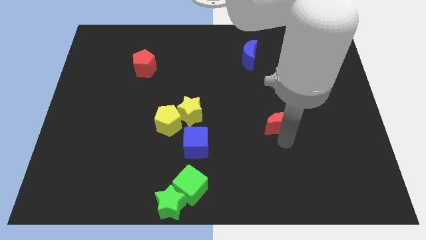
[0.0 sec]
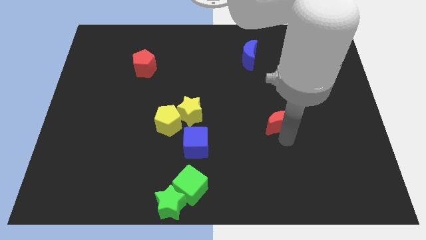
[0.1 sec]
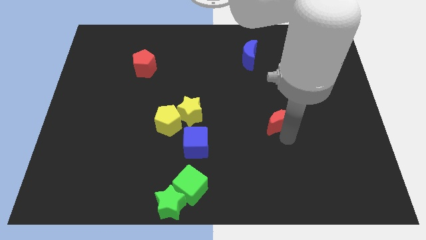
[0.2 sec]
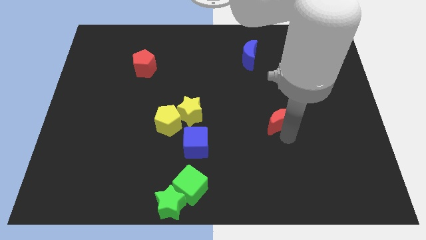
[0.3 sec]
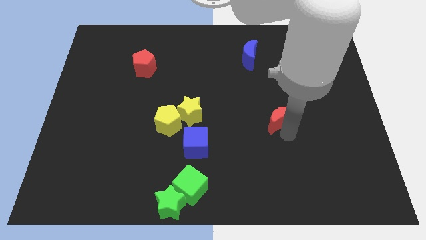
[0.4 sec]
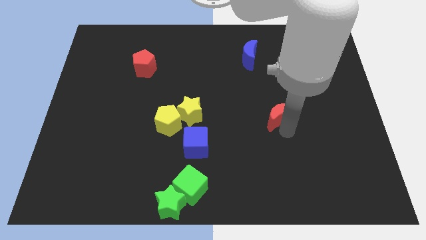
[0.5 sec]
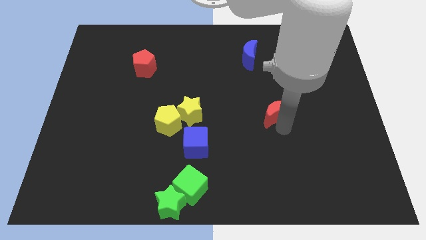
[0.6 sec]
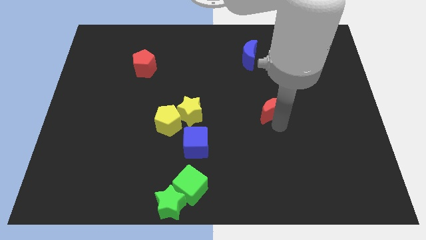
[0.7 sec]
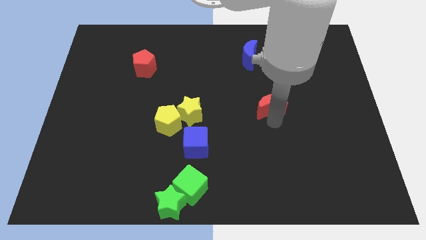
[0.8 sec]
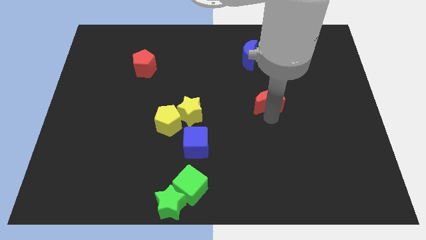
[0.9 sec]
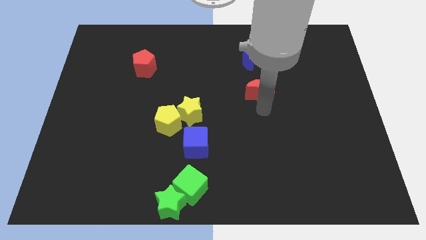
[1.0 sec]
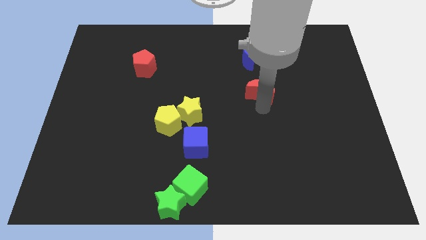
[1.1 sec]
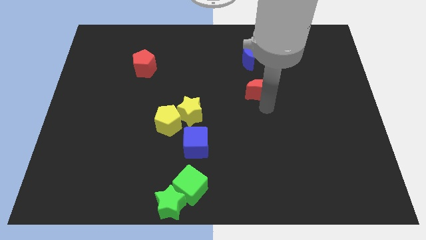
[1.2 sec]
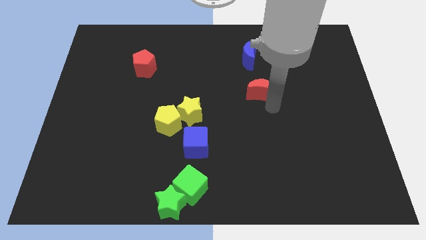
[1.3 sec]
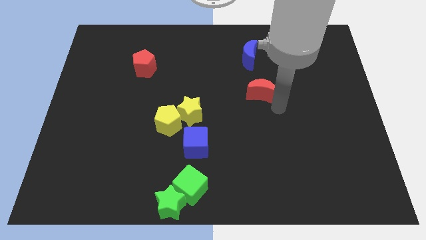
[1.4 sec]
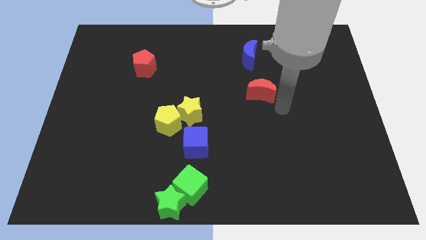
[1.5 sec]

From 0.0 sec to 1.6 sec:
push the red crescent towards the blue crescent

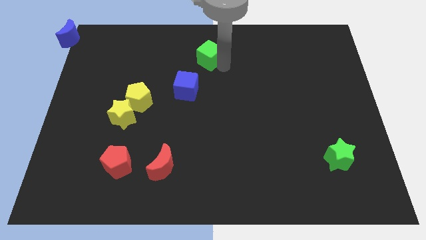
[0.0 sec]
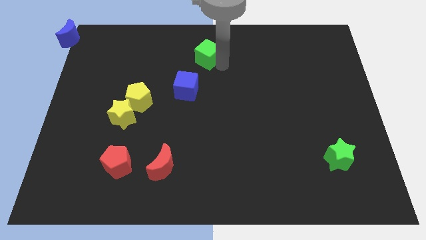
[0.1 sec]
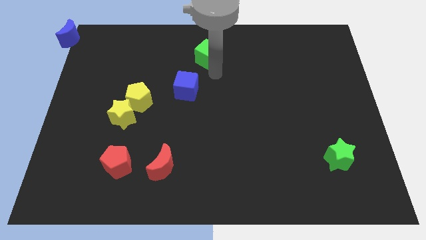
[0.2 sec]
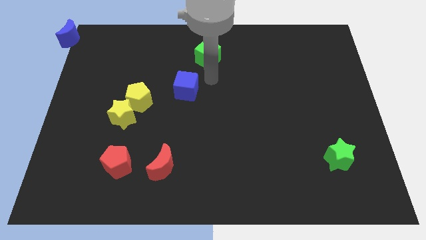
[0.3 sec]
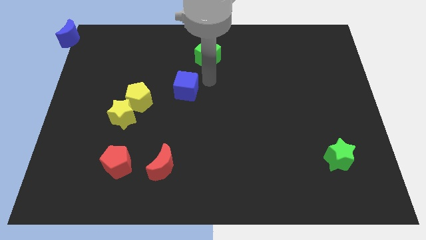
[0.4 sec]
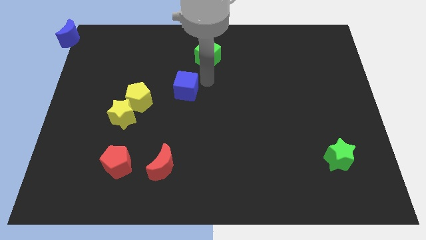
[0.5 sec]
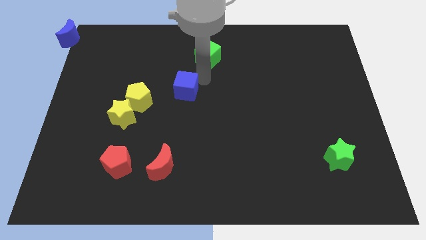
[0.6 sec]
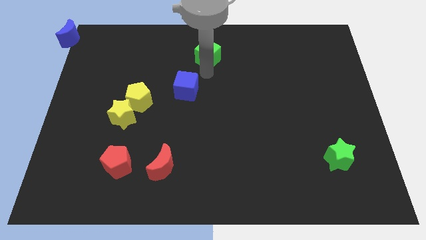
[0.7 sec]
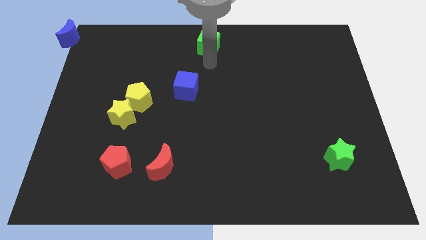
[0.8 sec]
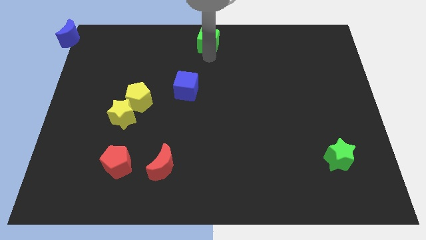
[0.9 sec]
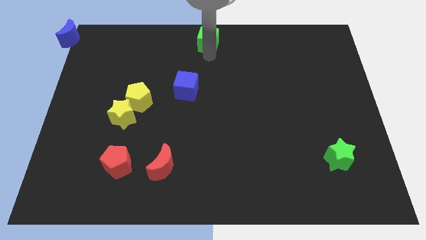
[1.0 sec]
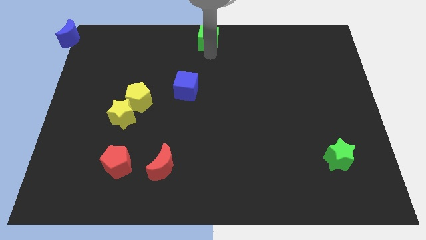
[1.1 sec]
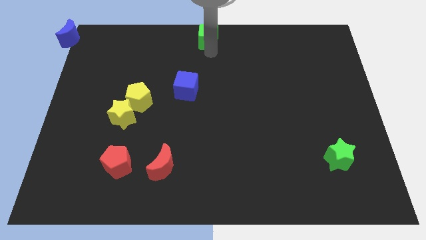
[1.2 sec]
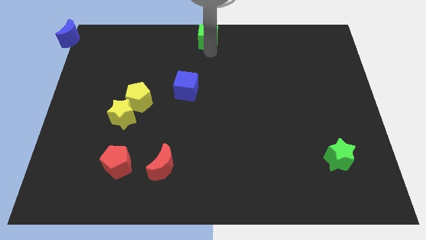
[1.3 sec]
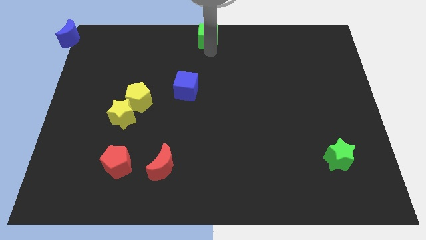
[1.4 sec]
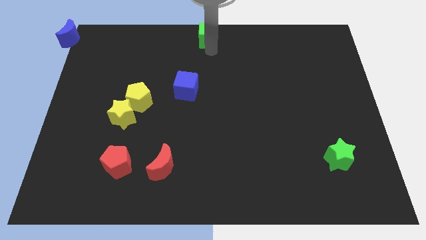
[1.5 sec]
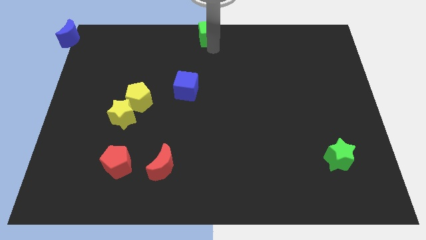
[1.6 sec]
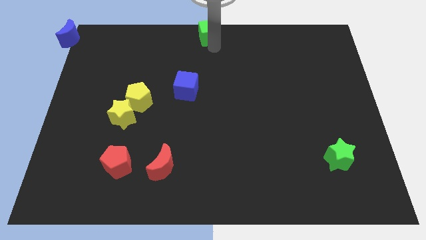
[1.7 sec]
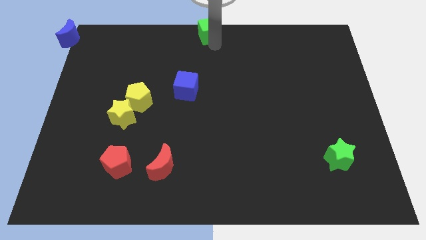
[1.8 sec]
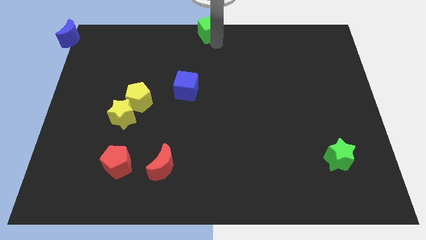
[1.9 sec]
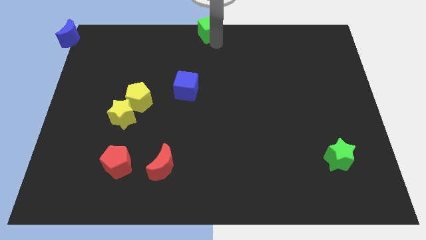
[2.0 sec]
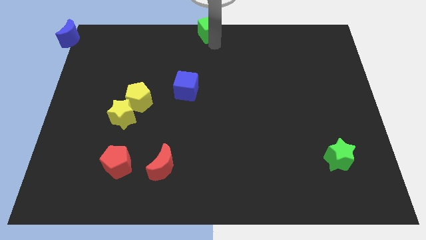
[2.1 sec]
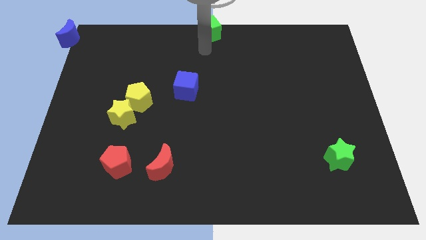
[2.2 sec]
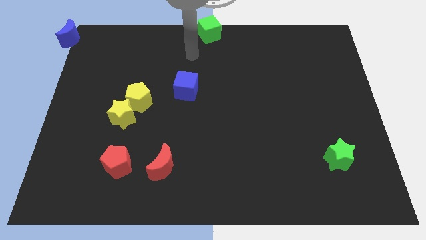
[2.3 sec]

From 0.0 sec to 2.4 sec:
move the green cube to the top middle

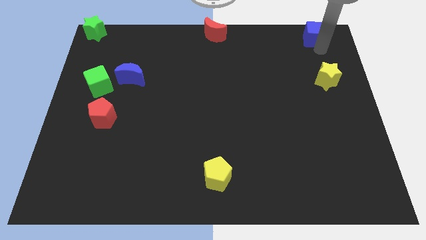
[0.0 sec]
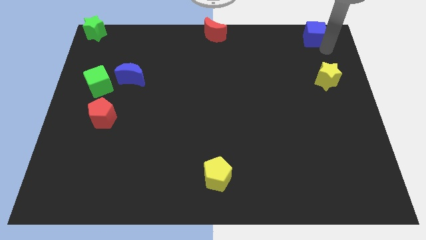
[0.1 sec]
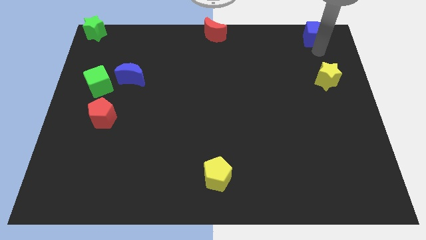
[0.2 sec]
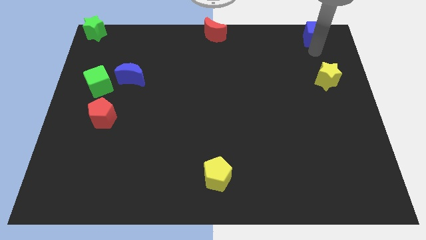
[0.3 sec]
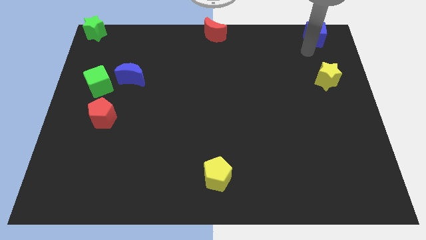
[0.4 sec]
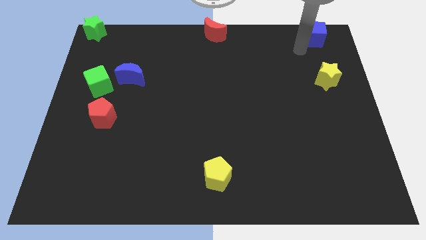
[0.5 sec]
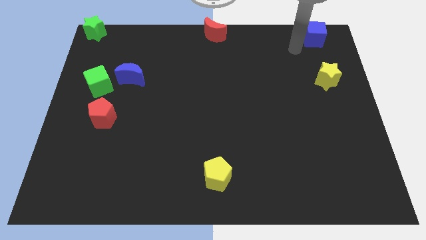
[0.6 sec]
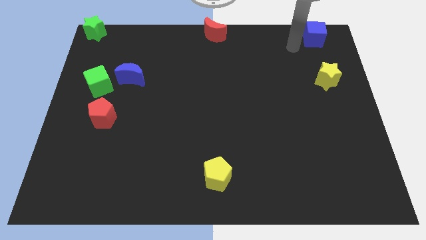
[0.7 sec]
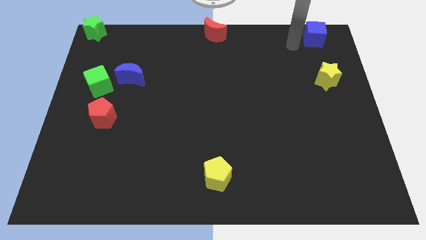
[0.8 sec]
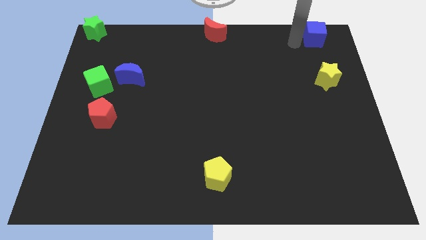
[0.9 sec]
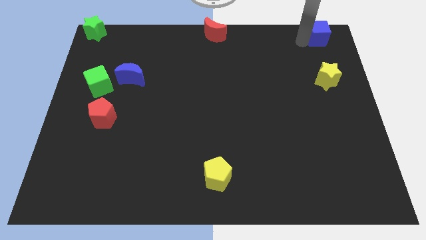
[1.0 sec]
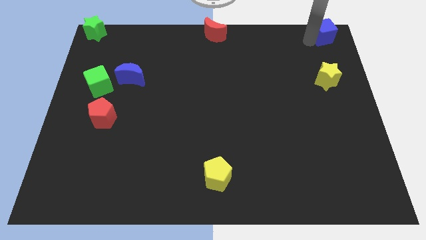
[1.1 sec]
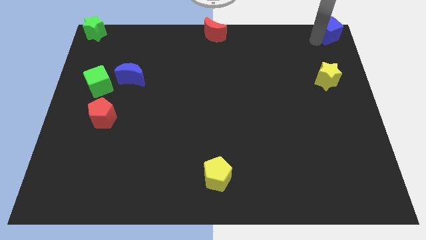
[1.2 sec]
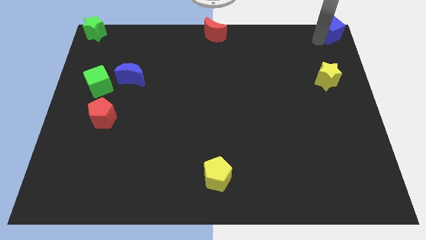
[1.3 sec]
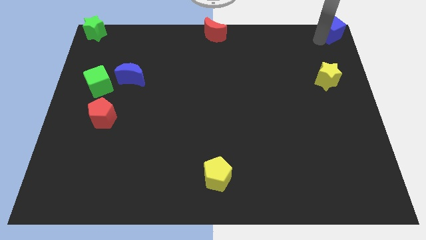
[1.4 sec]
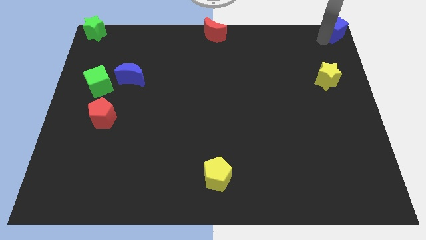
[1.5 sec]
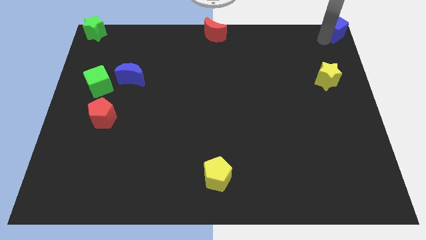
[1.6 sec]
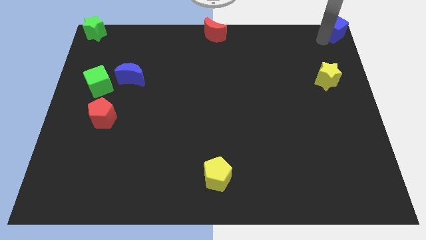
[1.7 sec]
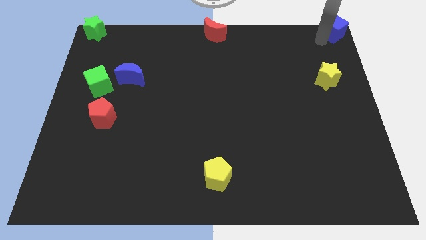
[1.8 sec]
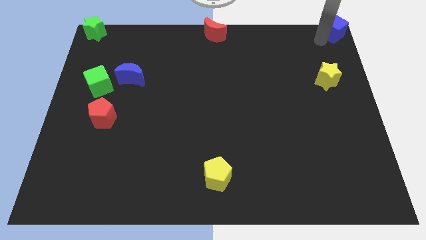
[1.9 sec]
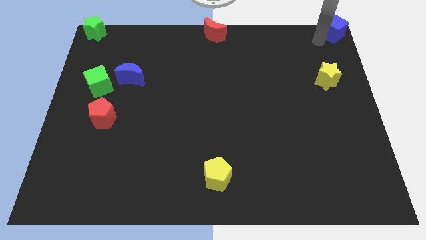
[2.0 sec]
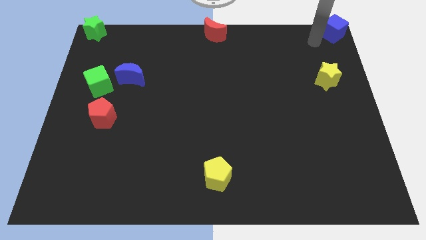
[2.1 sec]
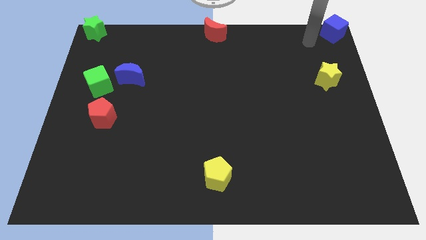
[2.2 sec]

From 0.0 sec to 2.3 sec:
move the blue cube to the top right corner

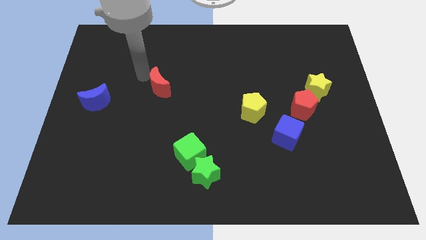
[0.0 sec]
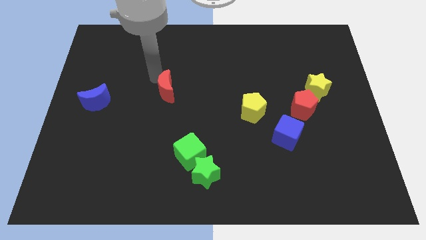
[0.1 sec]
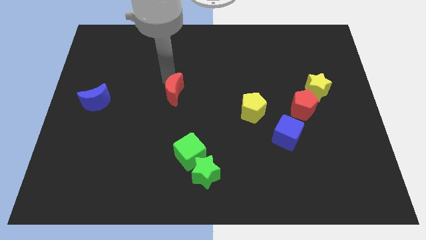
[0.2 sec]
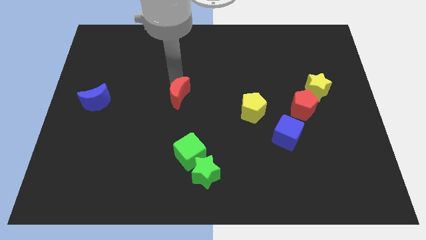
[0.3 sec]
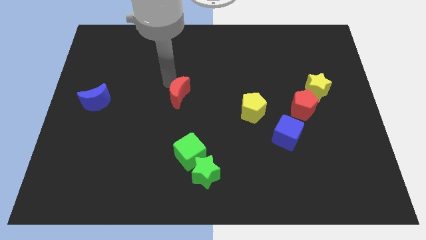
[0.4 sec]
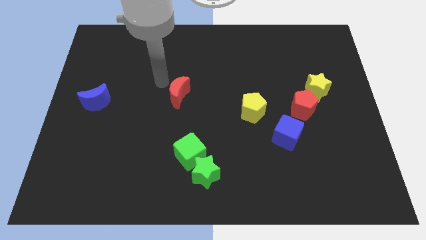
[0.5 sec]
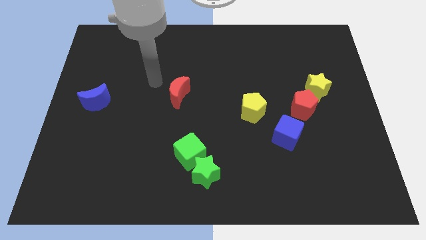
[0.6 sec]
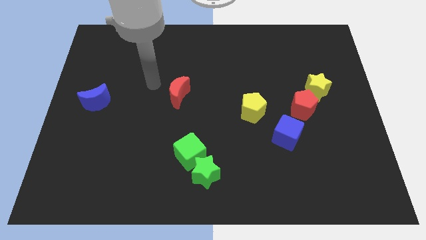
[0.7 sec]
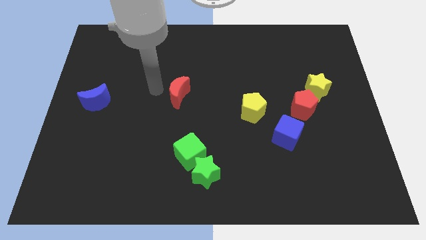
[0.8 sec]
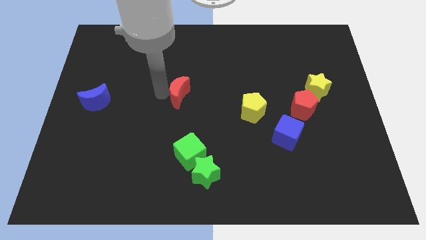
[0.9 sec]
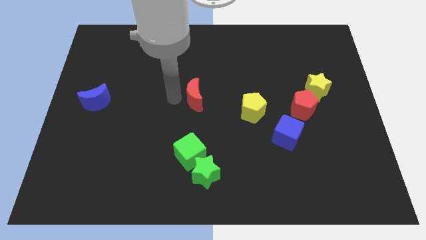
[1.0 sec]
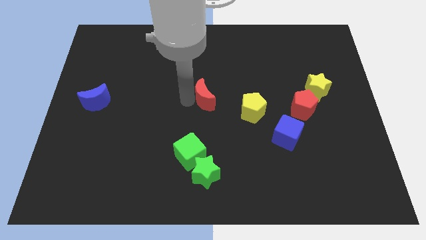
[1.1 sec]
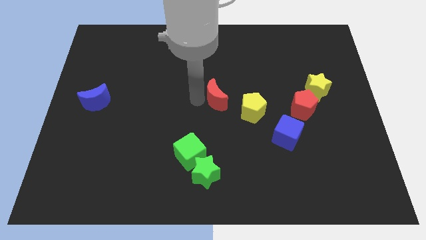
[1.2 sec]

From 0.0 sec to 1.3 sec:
push red moon towards the center of the board

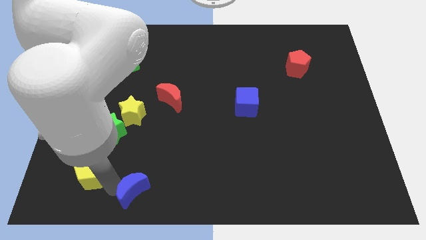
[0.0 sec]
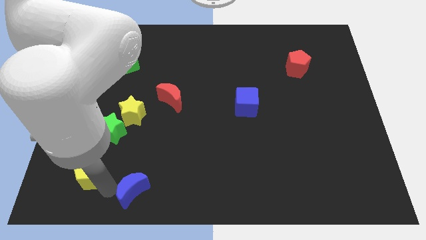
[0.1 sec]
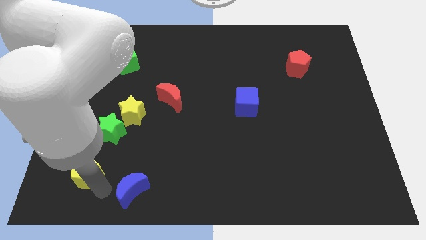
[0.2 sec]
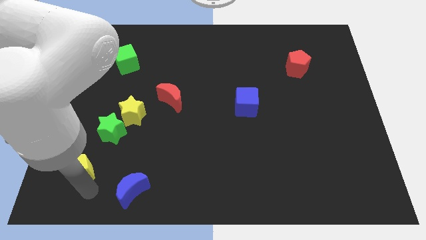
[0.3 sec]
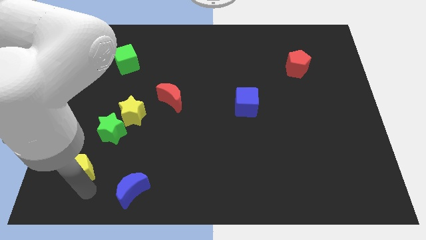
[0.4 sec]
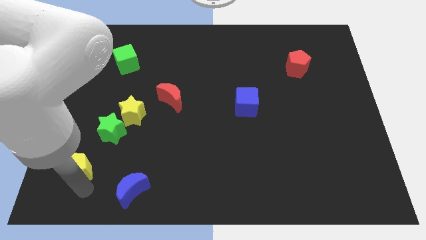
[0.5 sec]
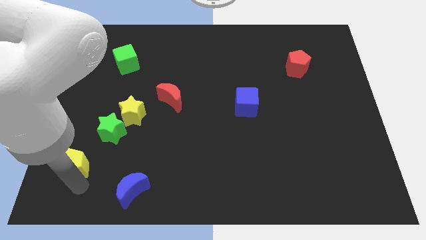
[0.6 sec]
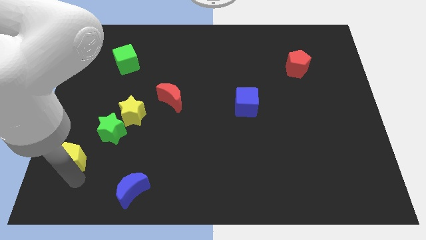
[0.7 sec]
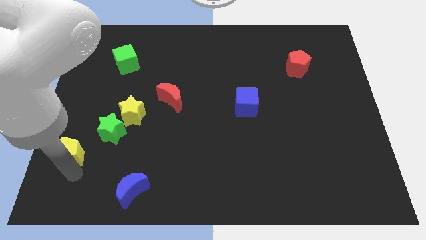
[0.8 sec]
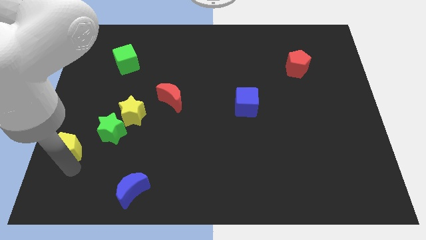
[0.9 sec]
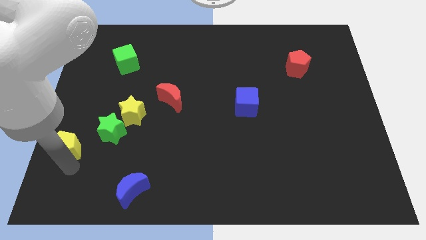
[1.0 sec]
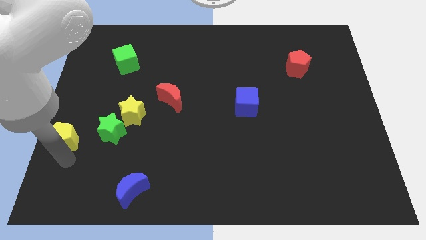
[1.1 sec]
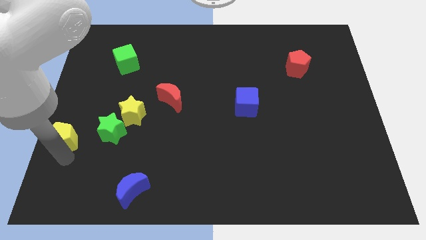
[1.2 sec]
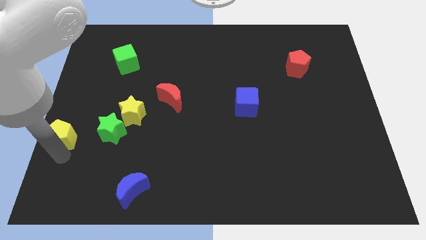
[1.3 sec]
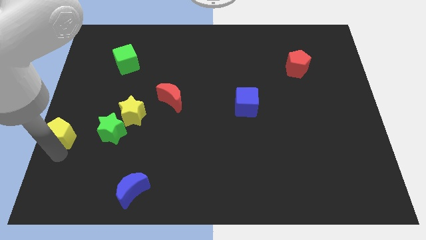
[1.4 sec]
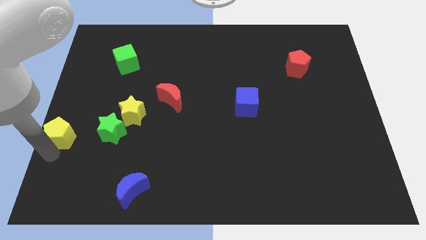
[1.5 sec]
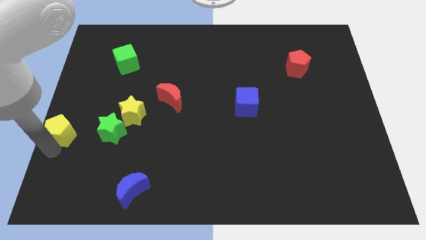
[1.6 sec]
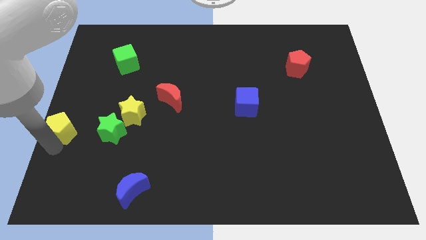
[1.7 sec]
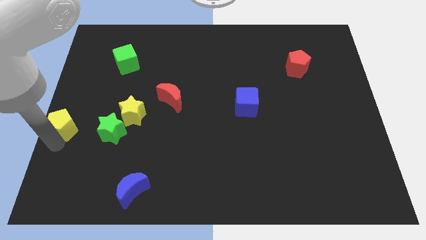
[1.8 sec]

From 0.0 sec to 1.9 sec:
put the yellow pentagon left to the green star
